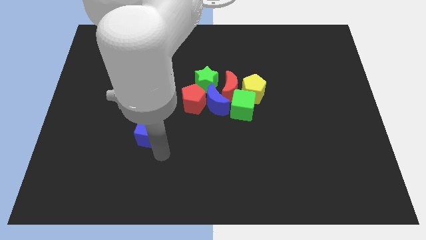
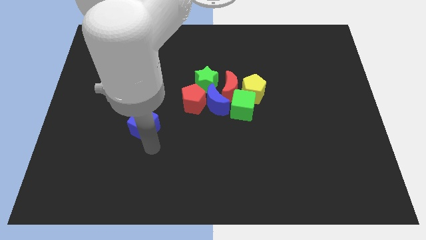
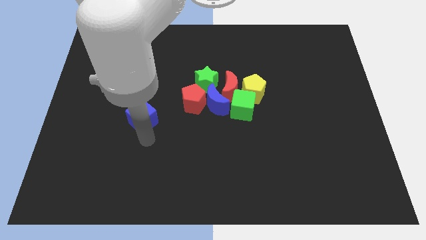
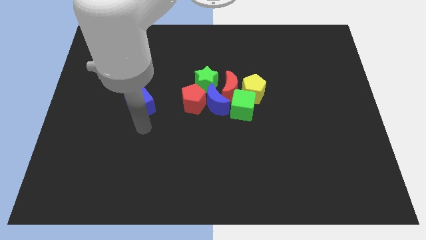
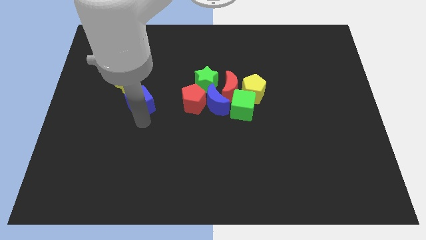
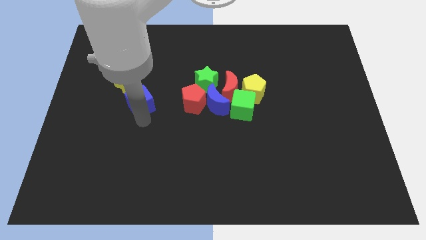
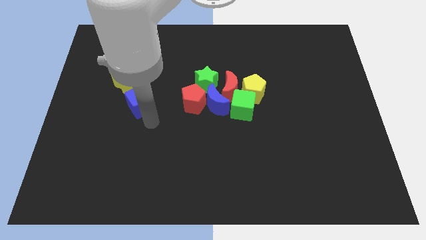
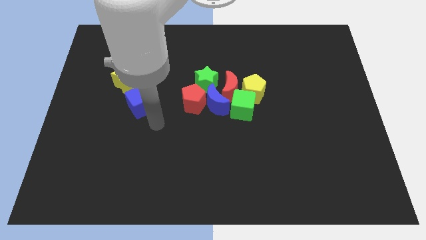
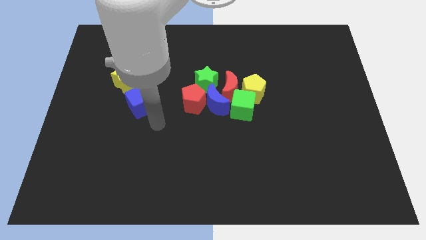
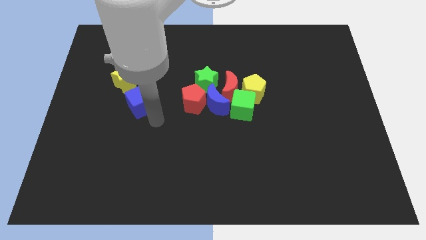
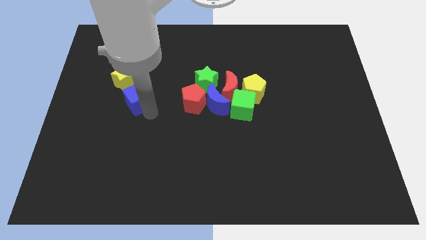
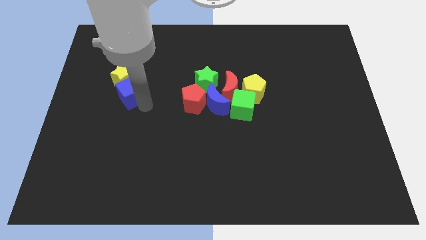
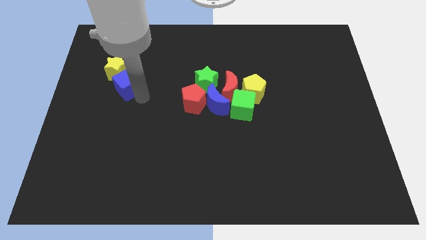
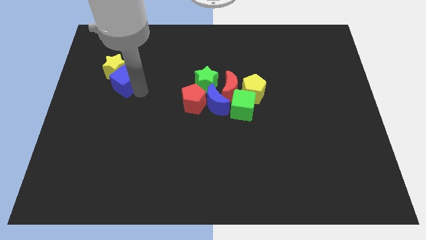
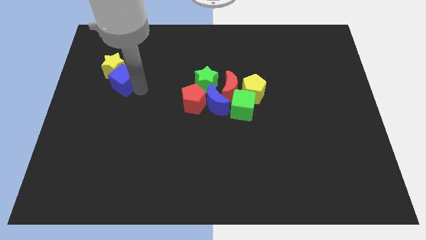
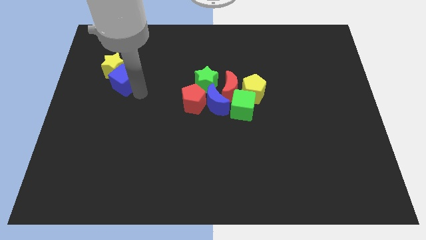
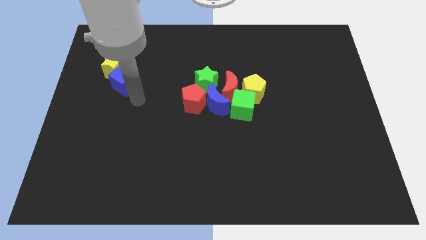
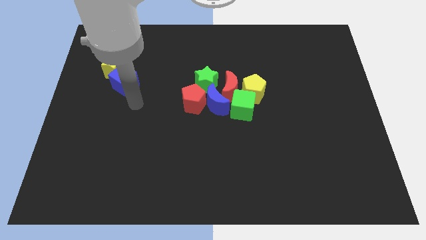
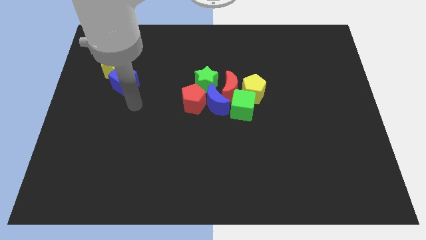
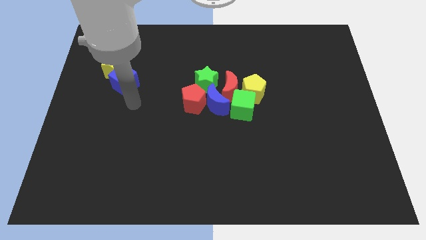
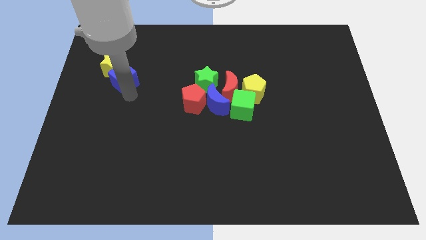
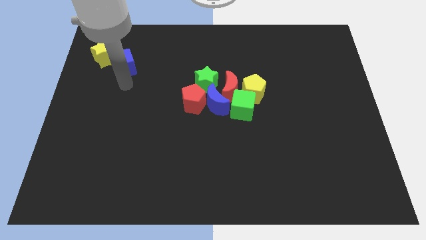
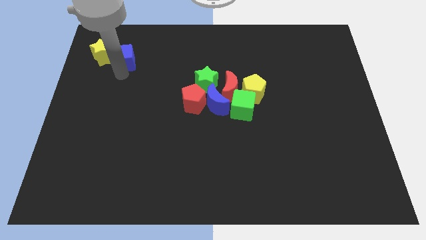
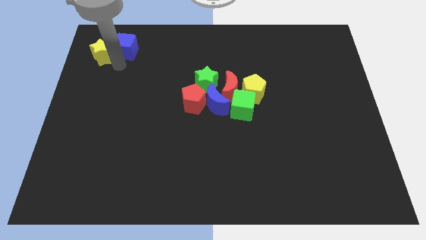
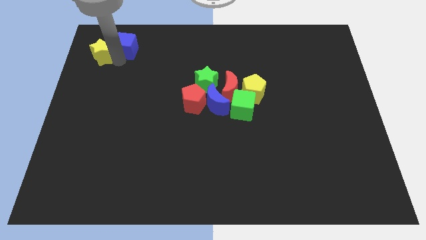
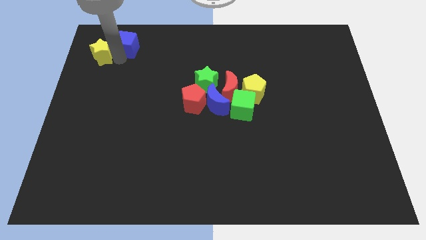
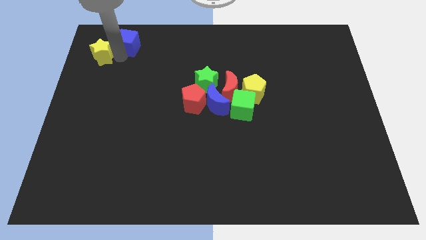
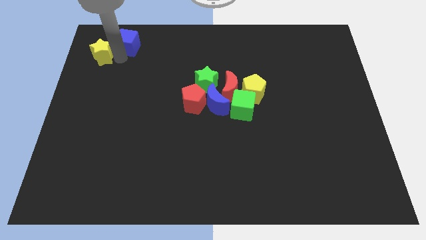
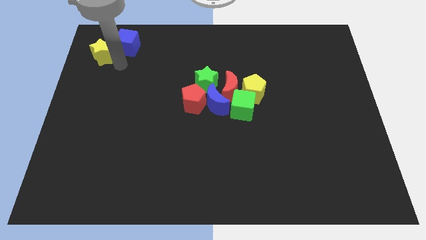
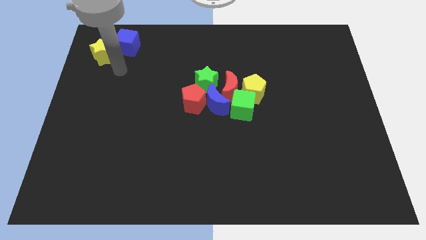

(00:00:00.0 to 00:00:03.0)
move the blue cube to the top left along with the yellow star

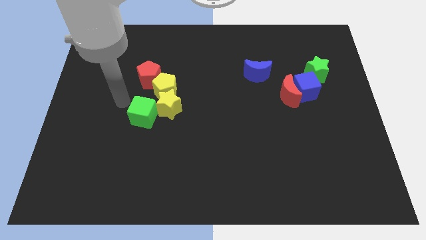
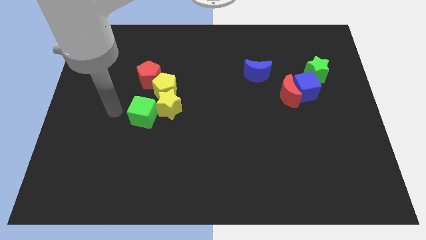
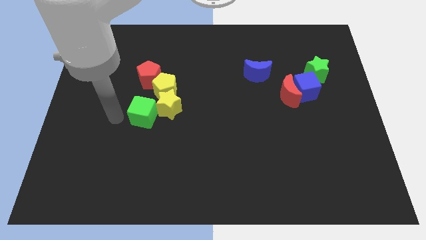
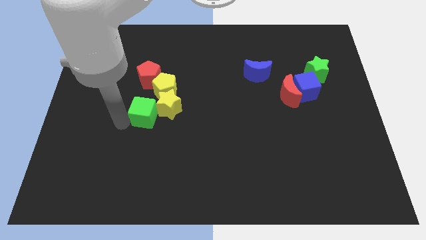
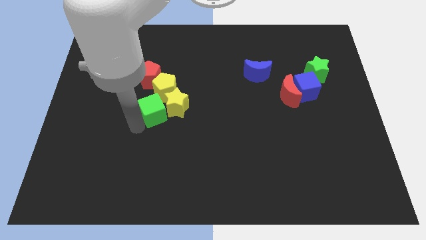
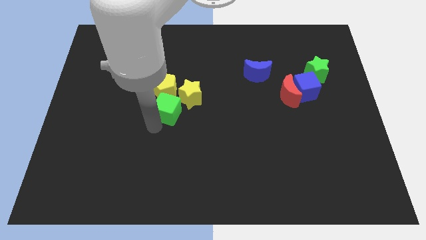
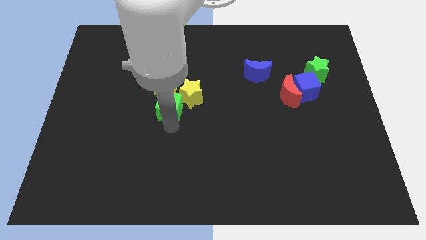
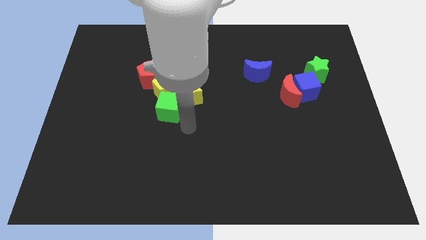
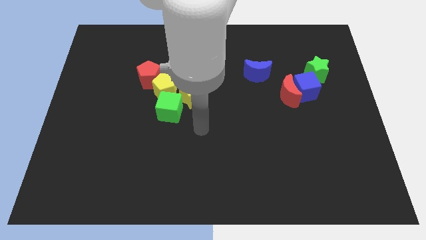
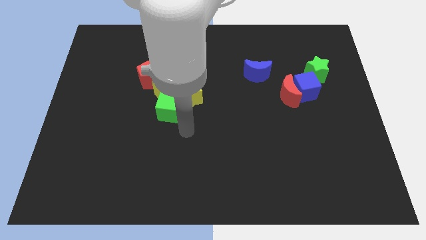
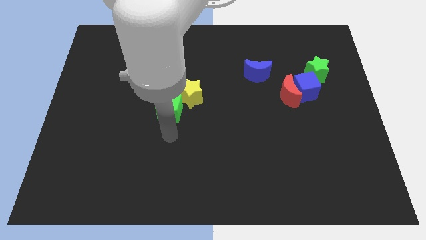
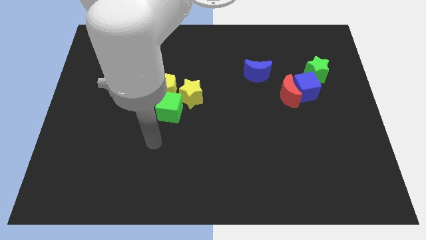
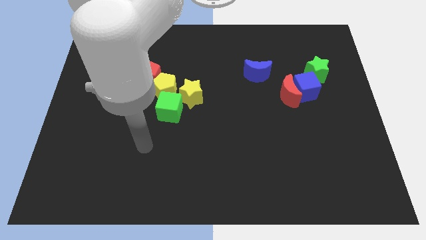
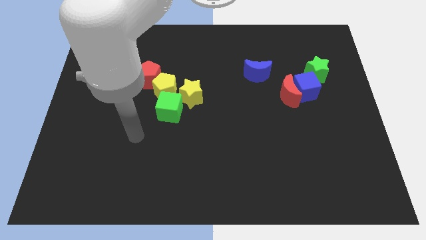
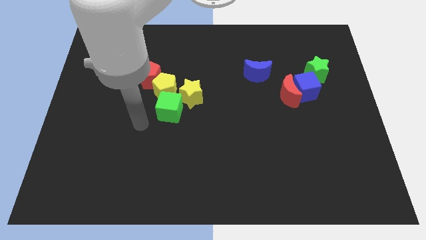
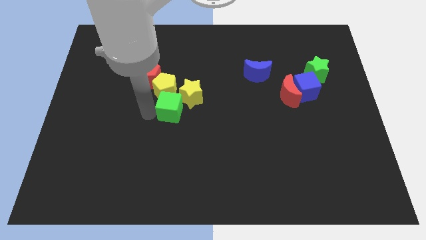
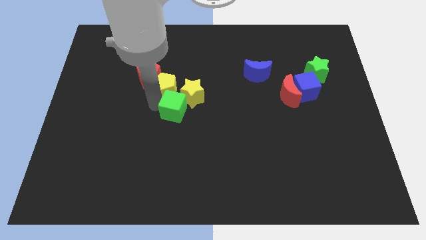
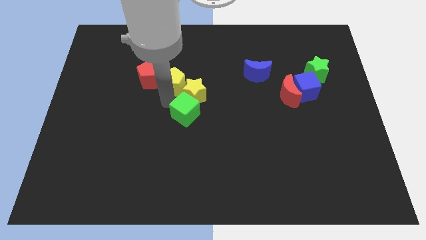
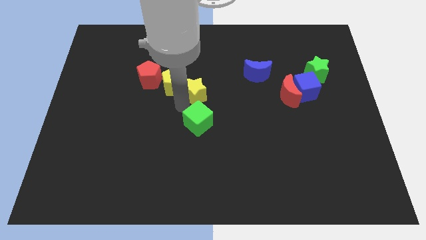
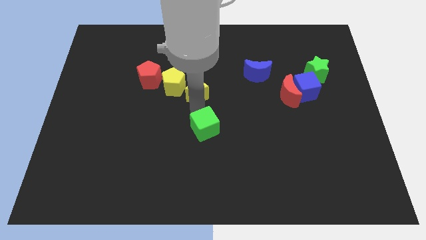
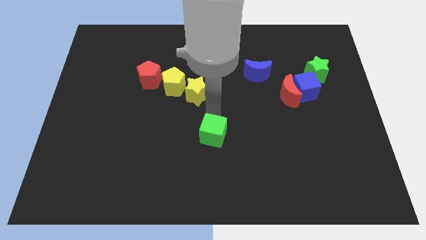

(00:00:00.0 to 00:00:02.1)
separate the green cube from the group of blocks

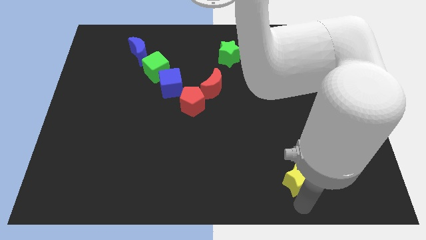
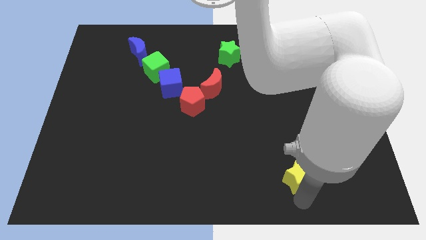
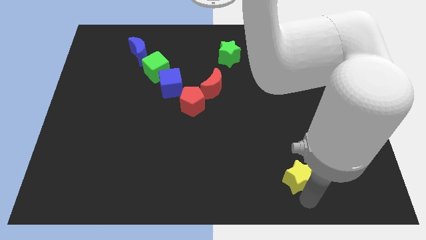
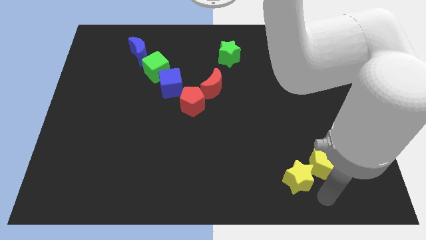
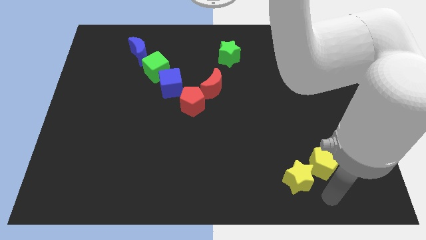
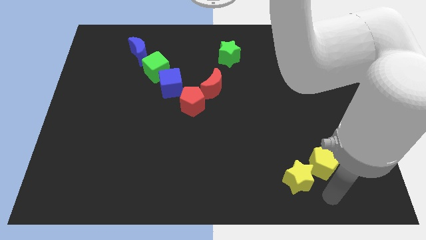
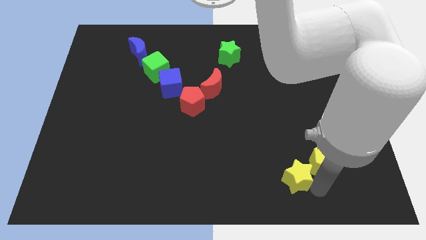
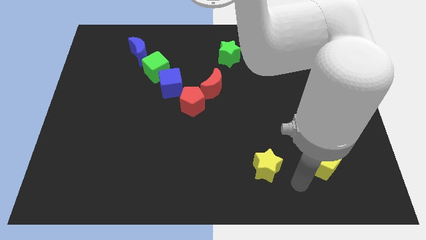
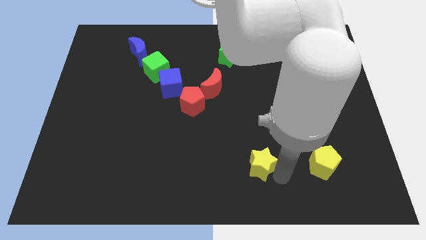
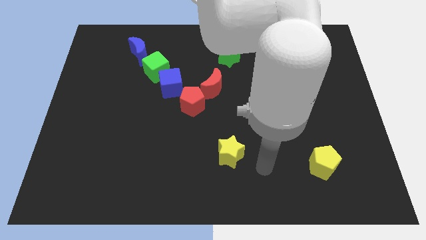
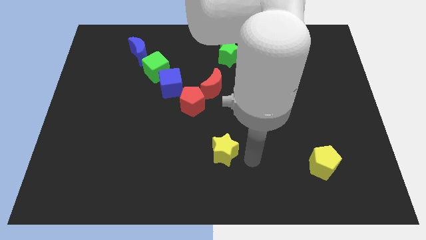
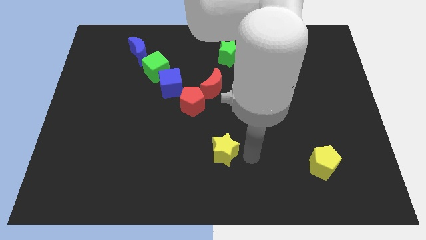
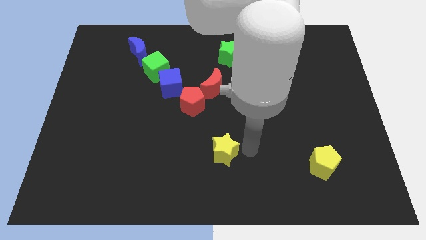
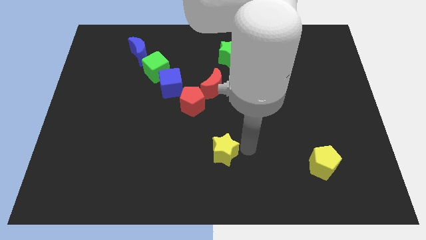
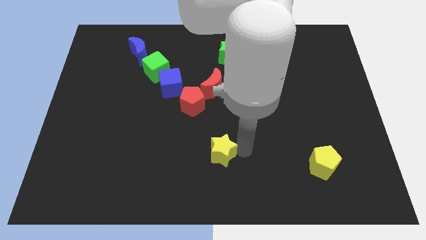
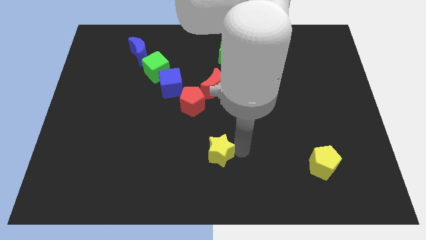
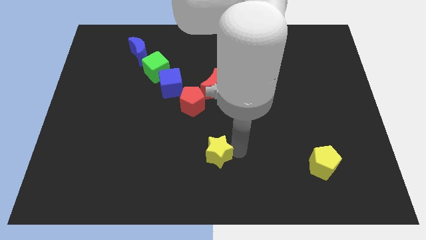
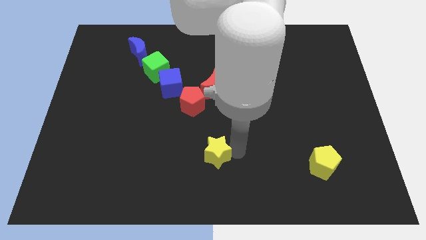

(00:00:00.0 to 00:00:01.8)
separate the yellow star from the yellow pentagon

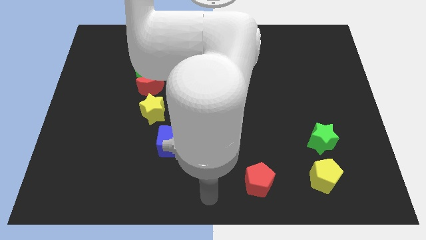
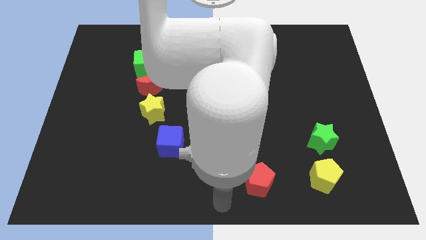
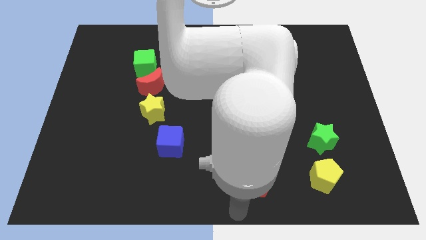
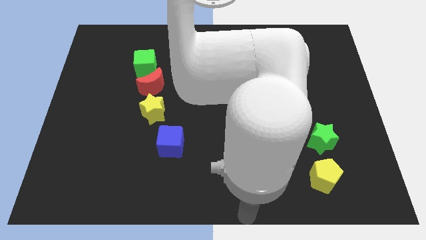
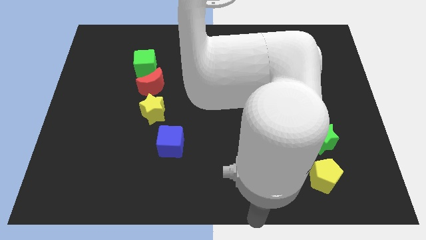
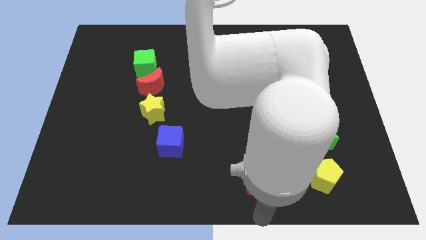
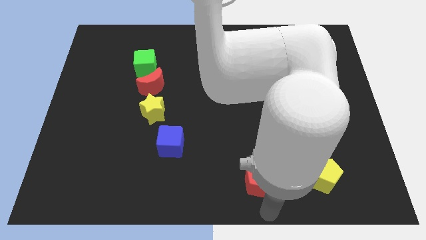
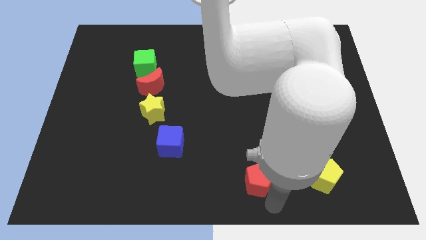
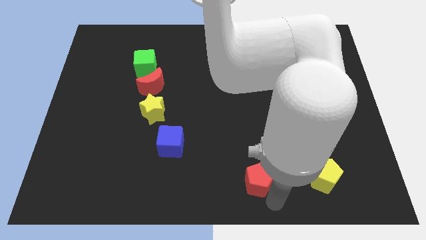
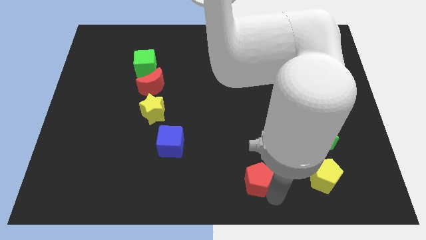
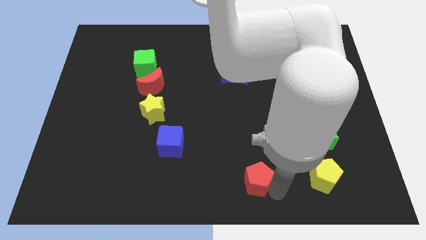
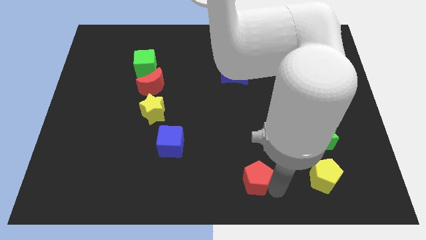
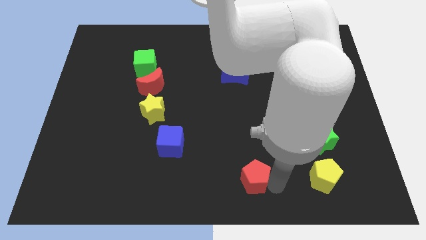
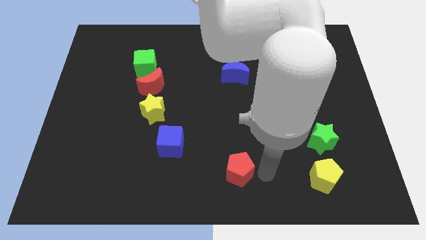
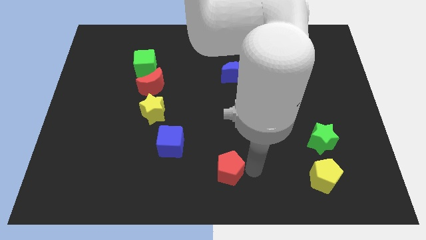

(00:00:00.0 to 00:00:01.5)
move the red pentagon slightly towards the top

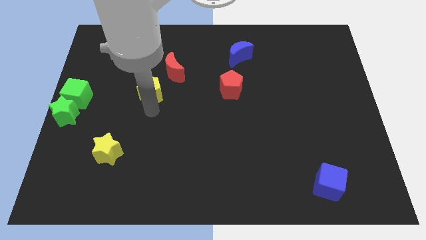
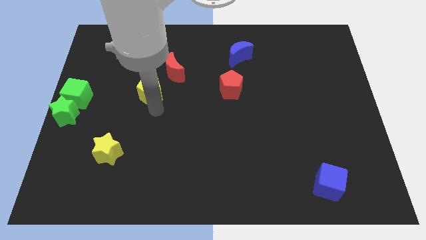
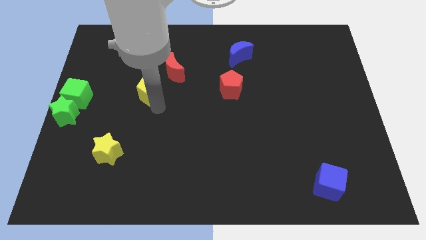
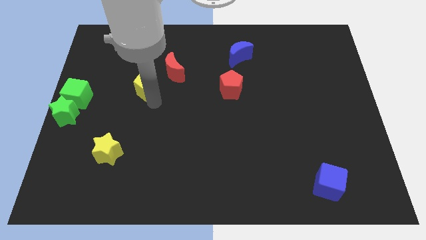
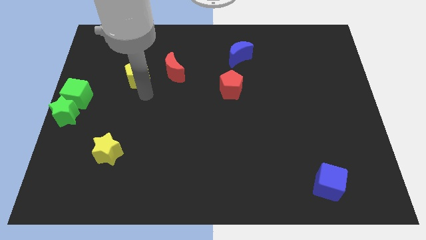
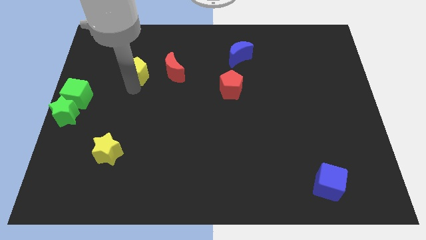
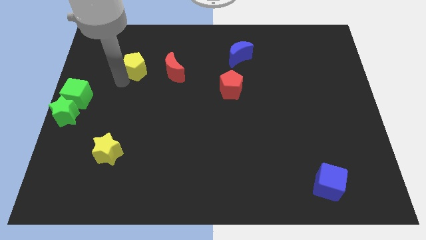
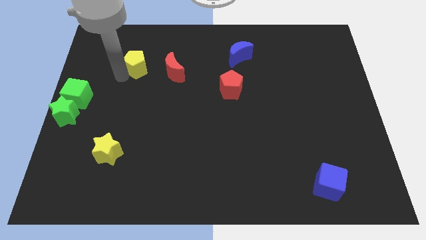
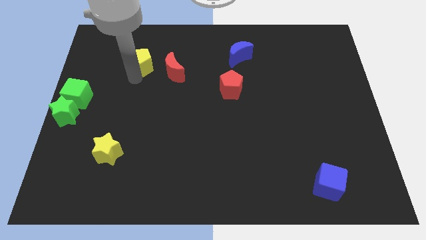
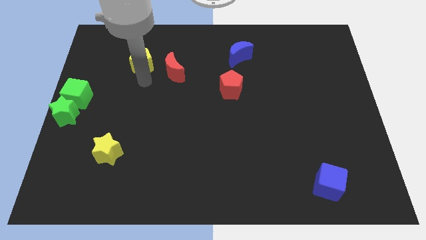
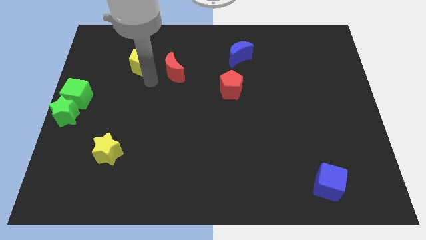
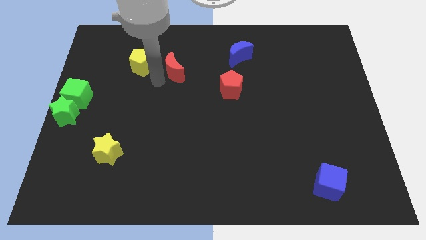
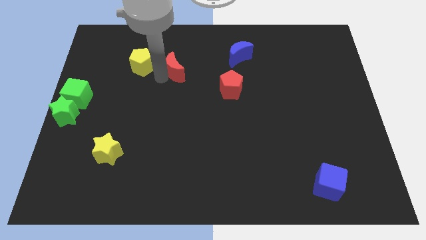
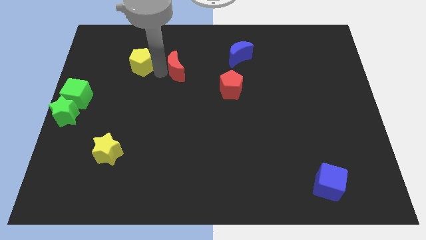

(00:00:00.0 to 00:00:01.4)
push the yellow pentagon upward
